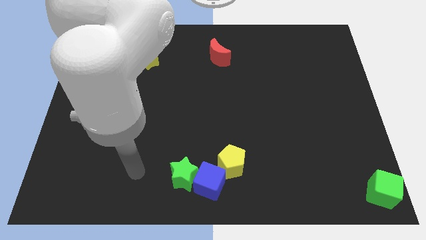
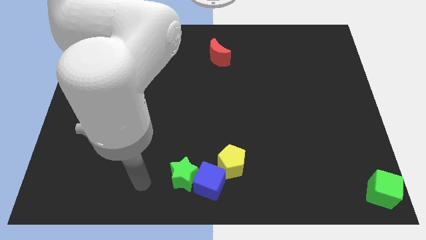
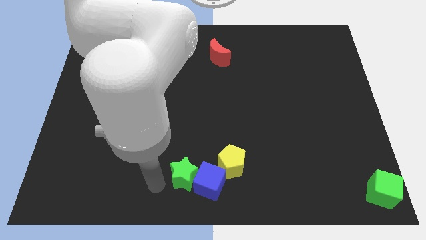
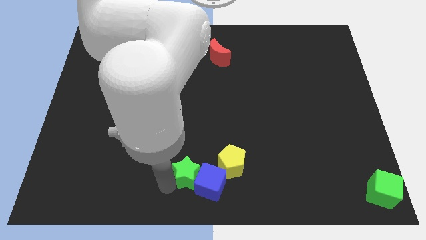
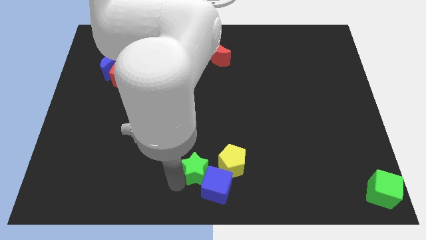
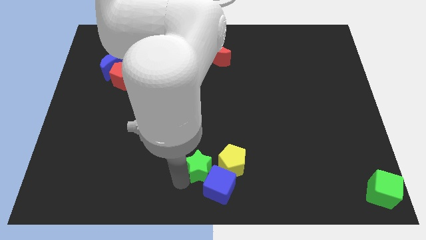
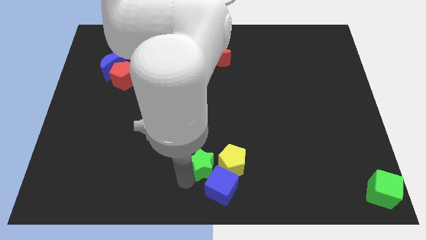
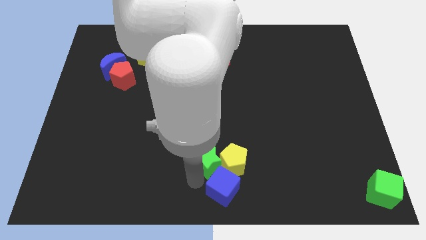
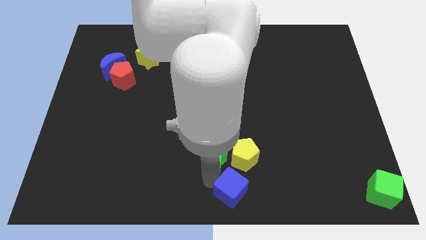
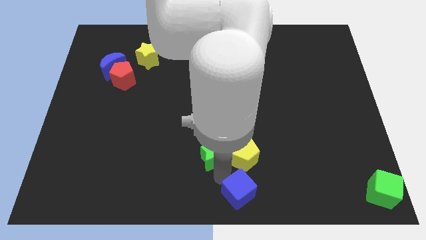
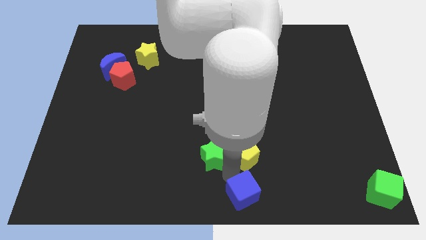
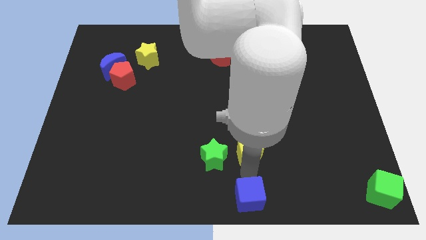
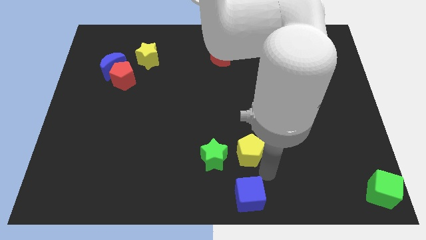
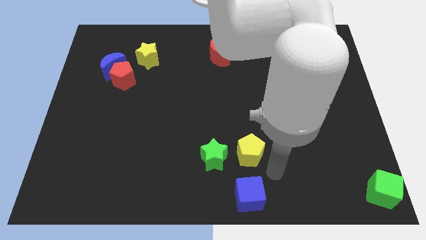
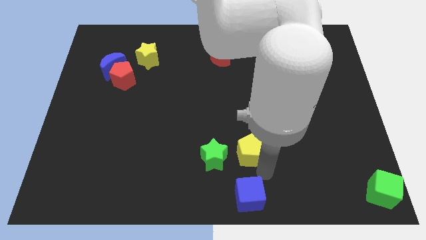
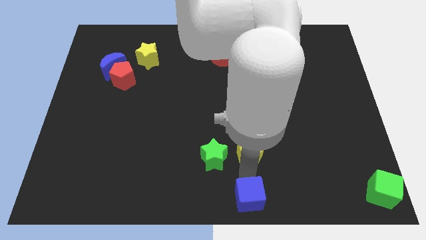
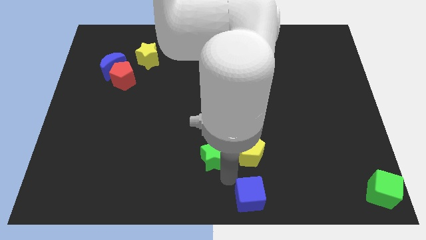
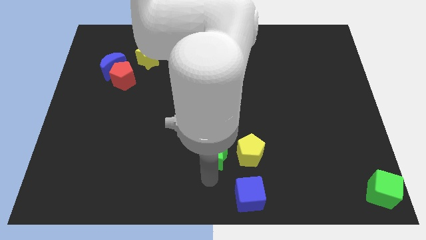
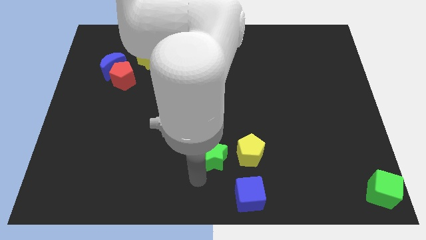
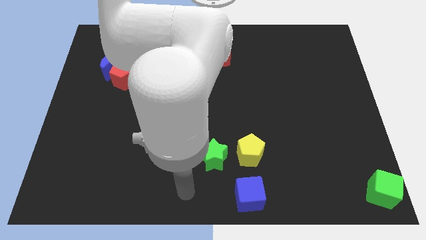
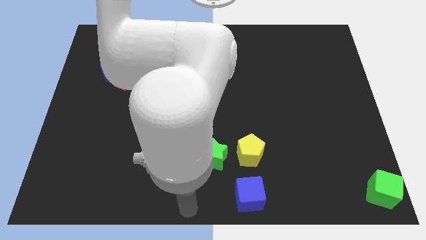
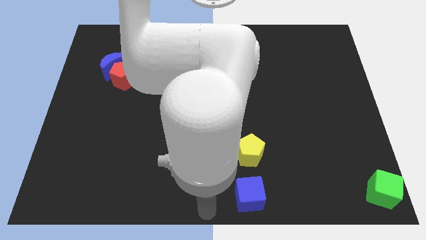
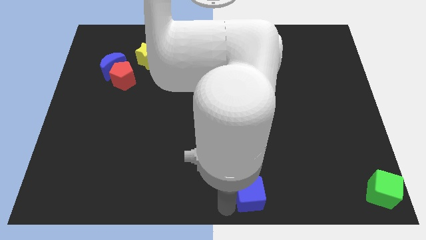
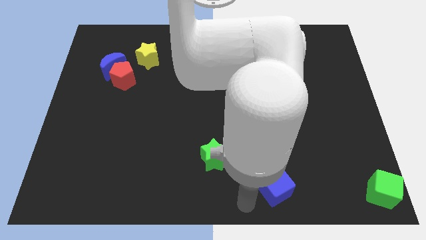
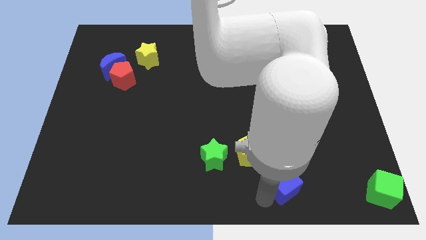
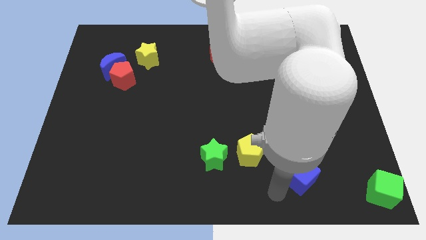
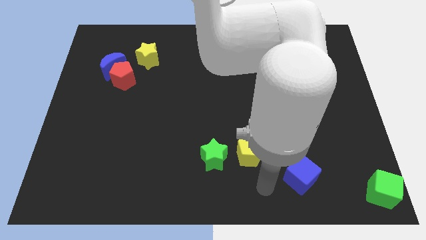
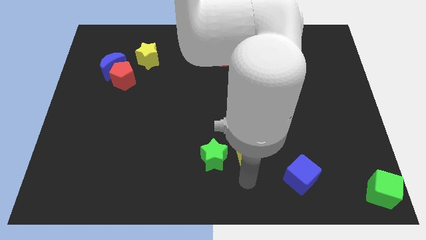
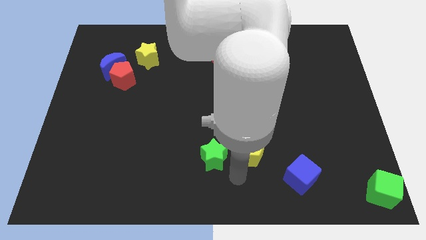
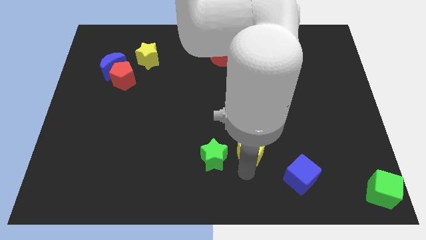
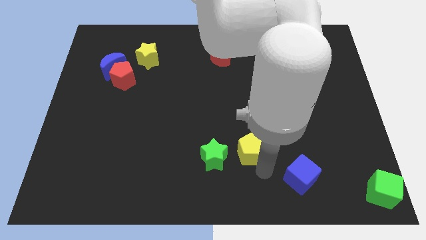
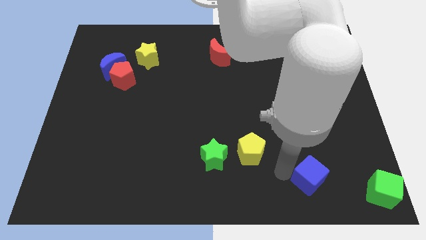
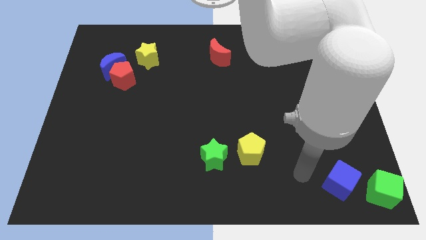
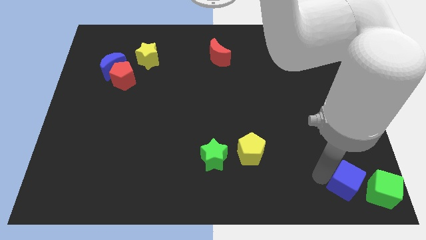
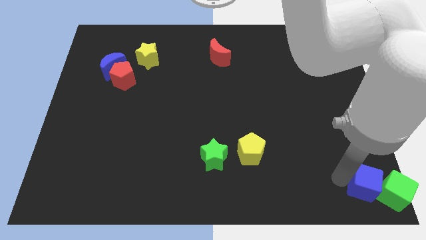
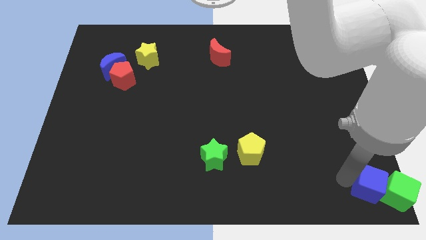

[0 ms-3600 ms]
place blue cube near green cube

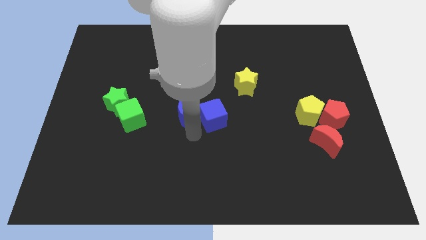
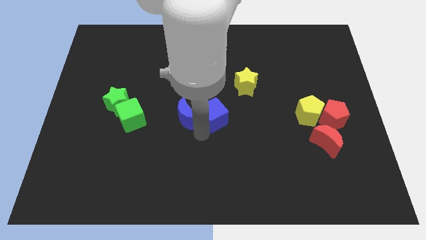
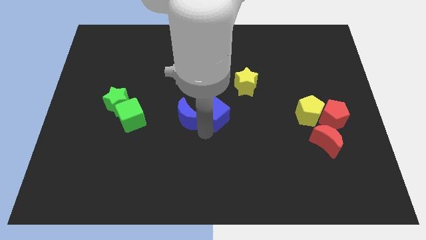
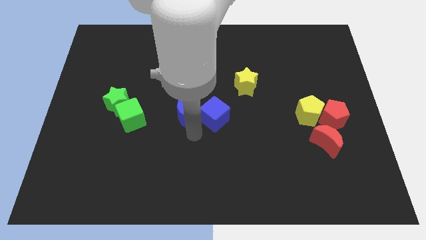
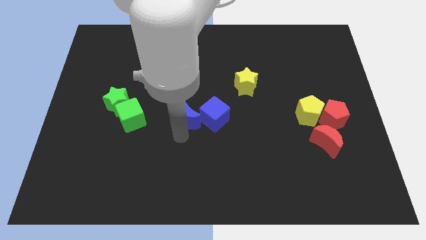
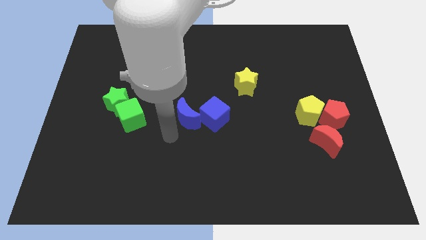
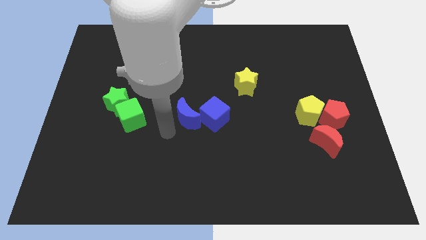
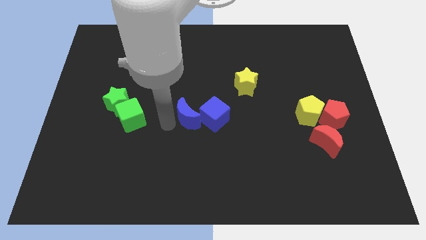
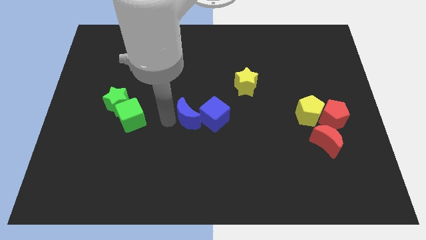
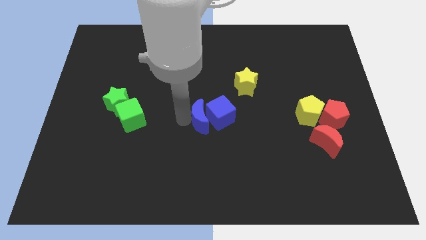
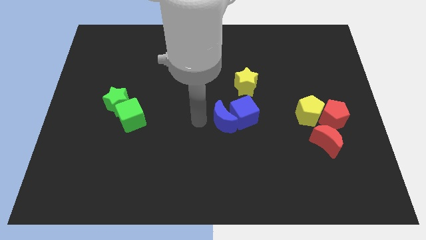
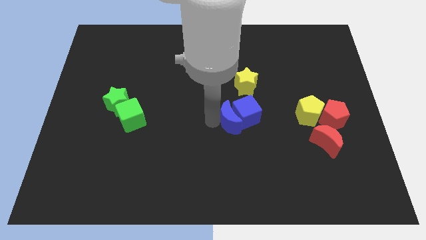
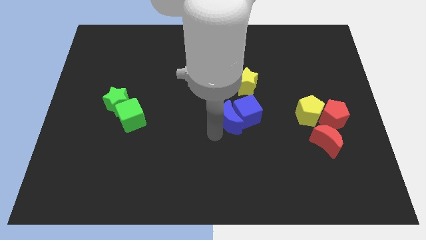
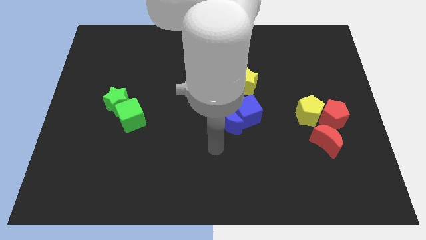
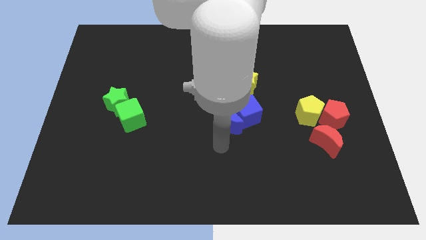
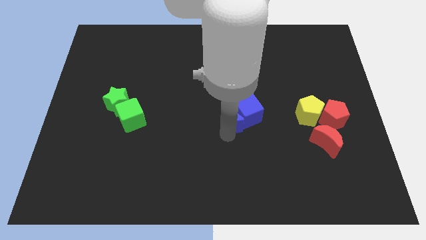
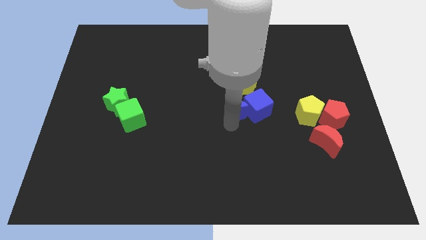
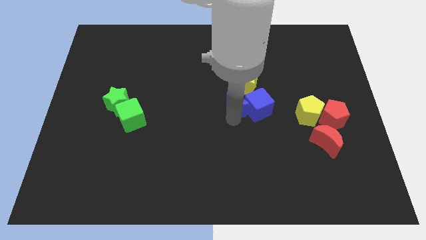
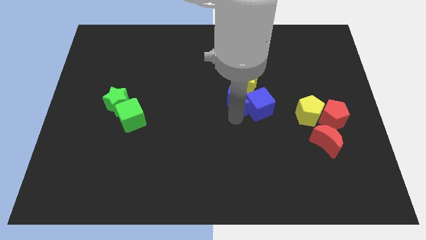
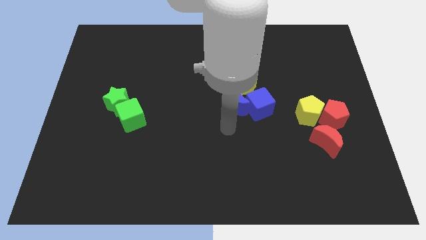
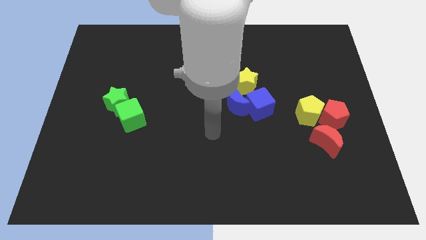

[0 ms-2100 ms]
move blue blocks in between the yellow blocks

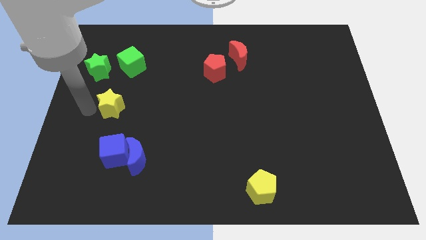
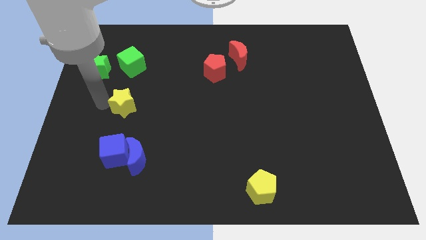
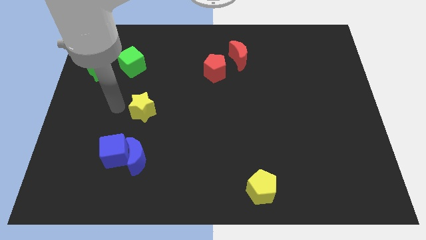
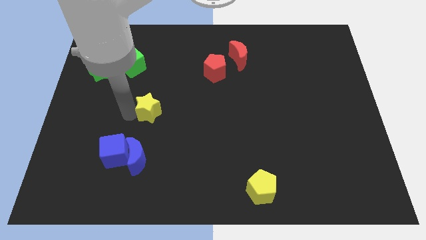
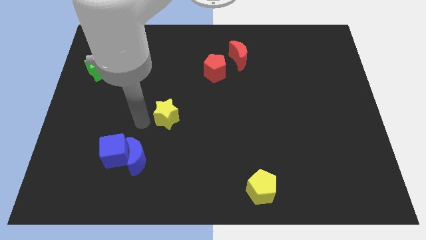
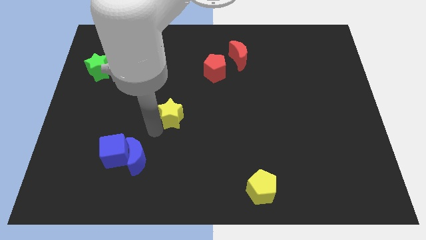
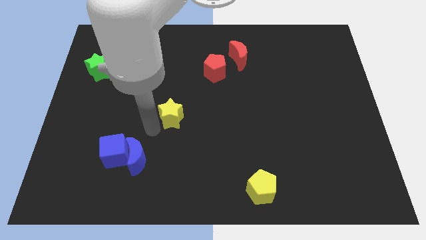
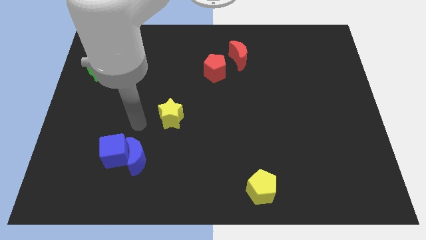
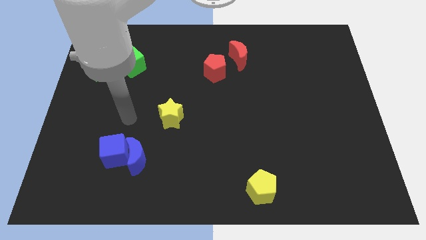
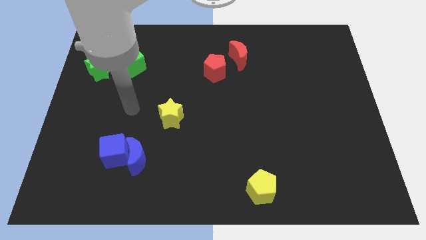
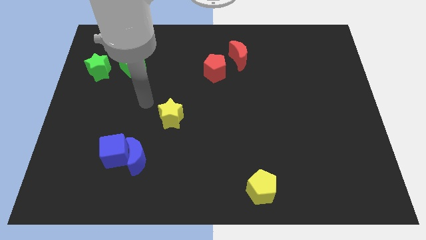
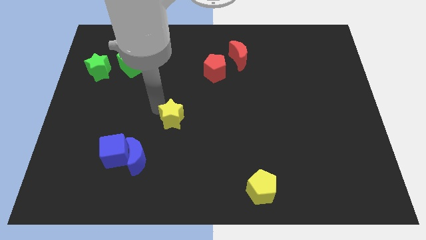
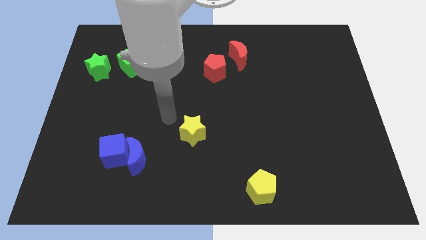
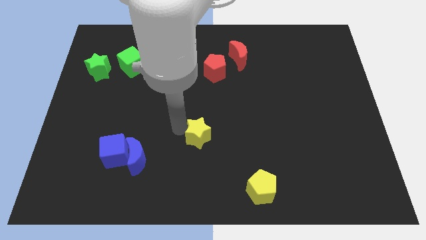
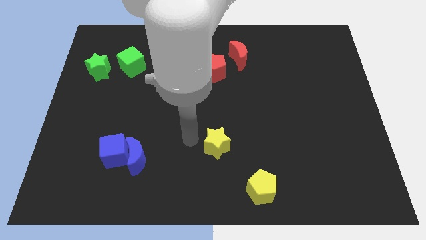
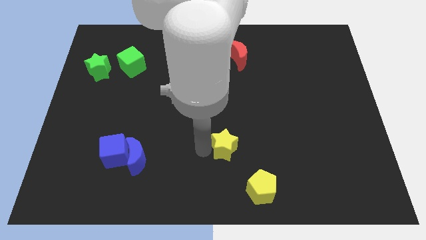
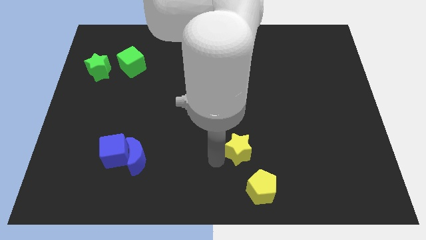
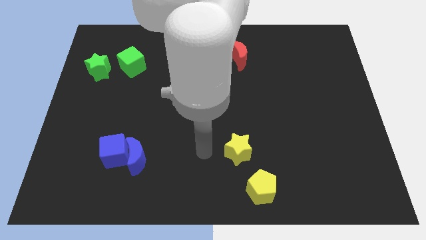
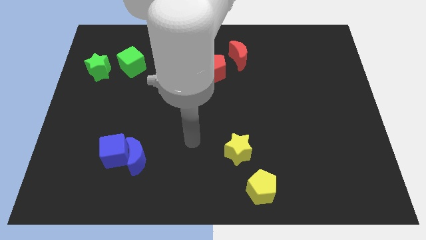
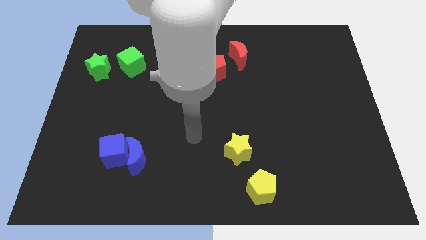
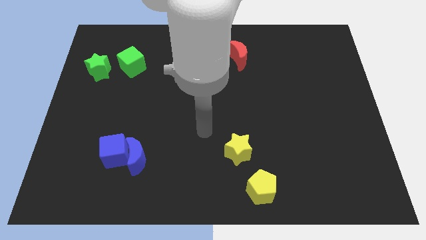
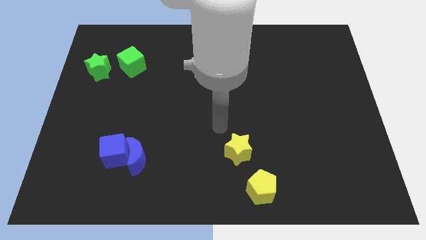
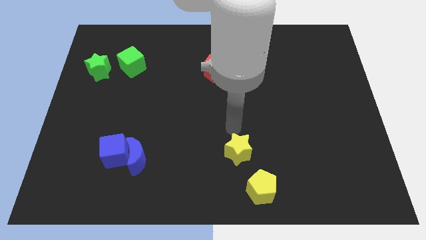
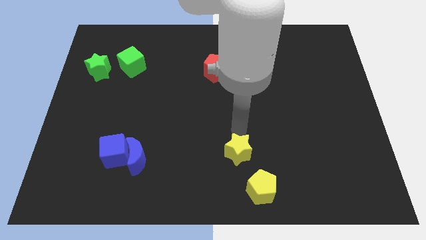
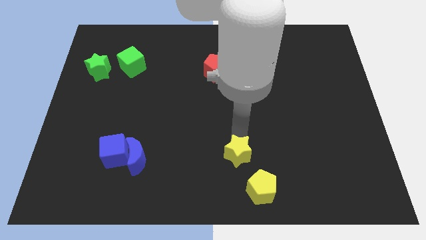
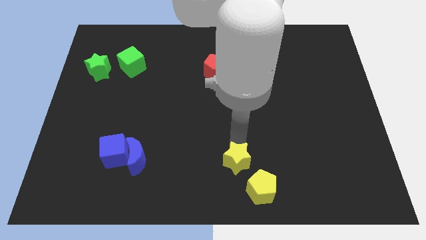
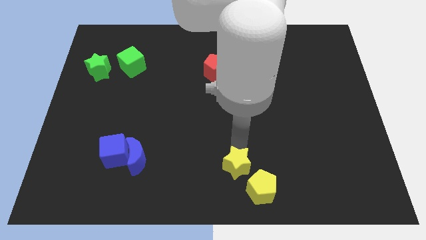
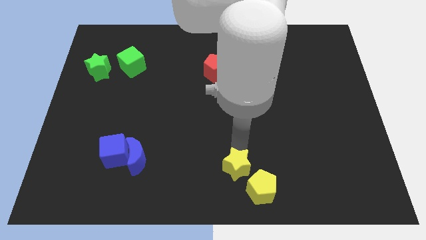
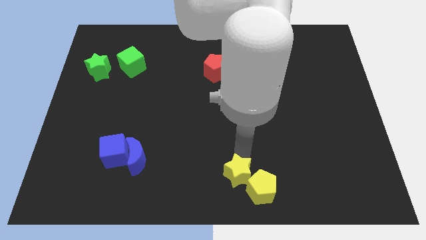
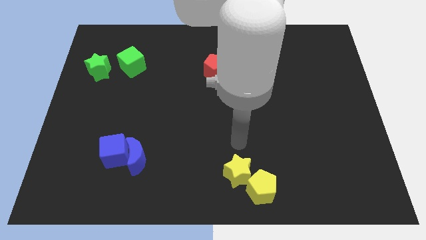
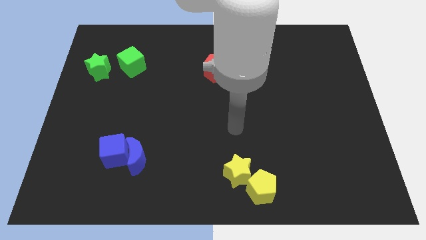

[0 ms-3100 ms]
drag the yellow star close to the yellow pentagon
